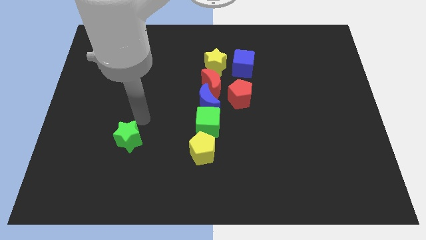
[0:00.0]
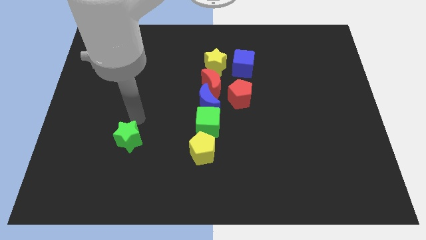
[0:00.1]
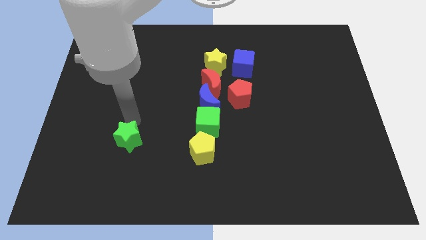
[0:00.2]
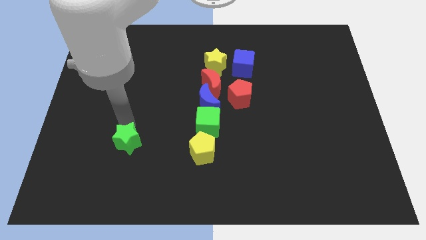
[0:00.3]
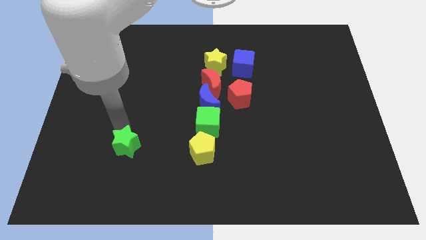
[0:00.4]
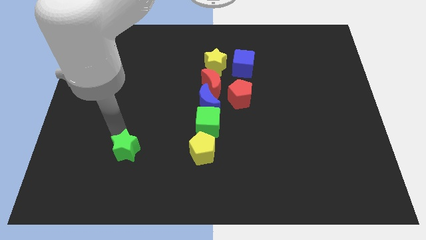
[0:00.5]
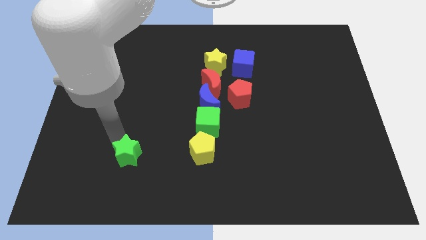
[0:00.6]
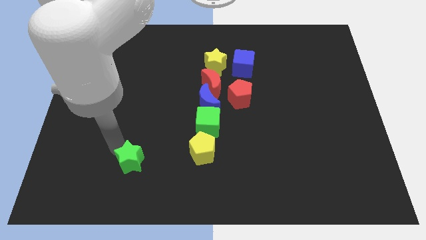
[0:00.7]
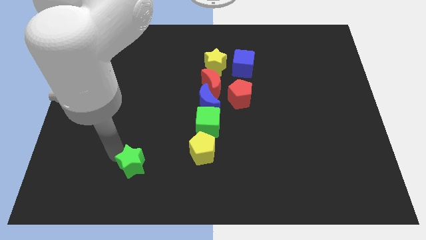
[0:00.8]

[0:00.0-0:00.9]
push the green star towards the bottom

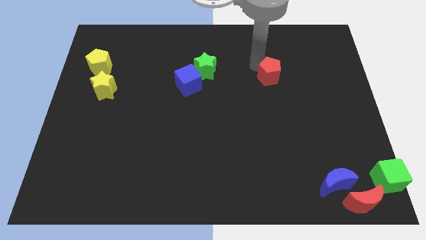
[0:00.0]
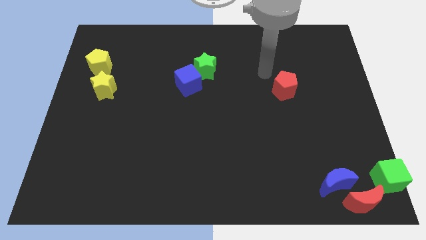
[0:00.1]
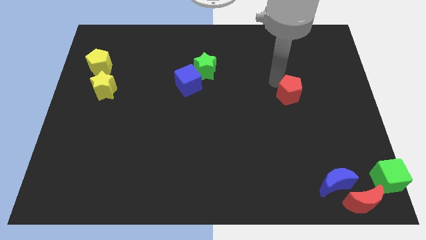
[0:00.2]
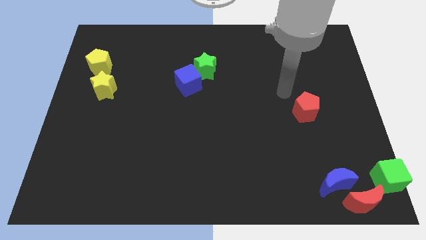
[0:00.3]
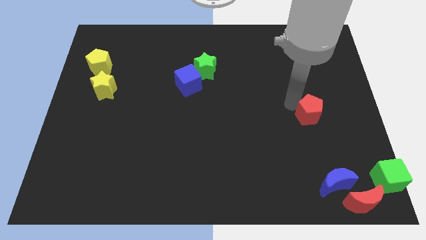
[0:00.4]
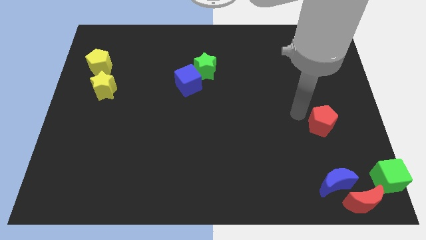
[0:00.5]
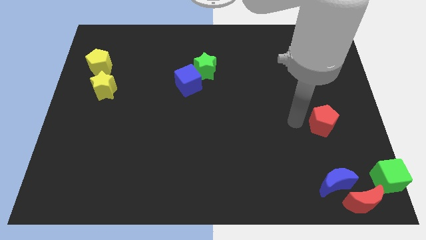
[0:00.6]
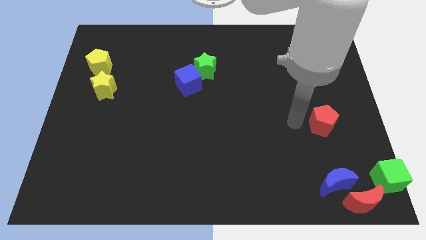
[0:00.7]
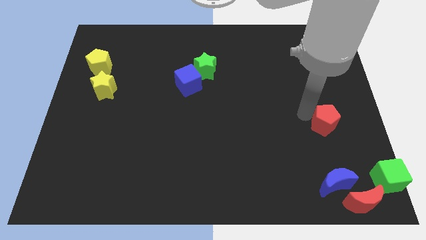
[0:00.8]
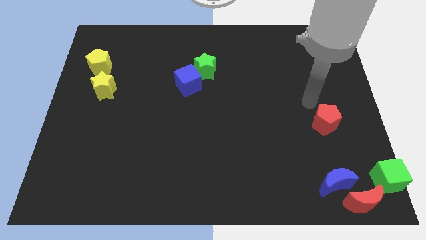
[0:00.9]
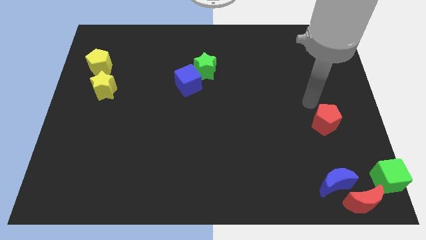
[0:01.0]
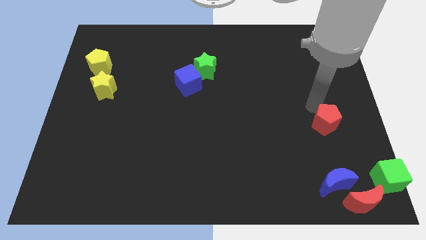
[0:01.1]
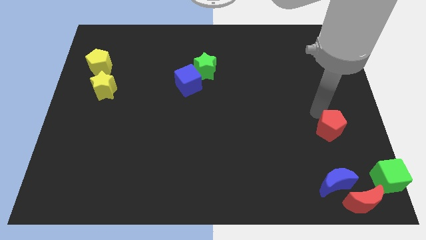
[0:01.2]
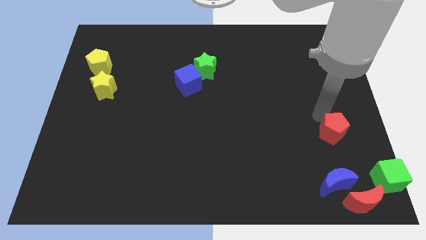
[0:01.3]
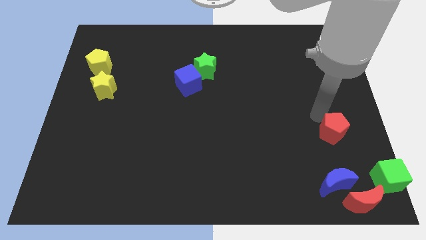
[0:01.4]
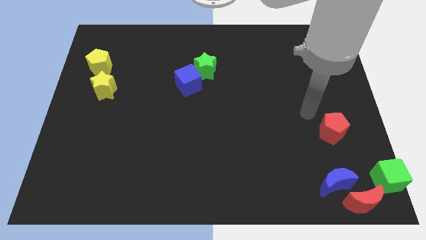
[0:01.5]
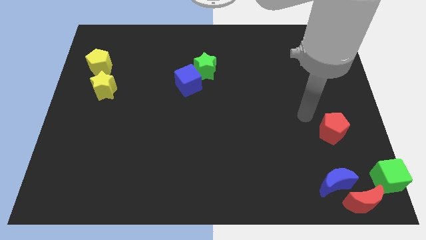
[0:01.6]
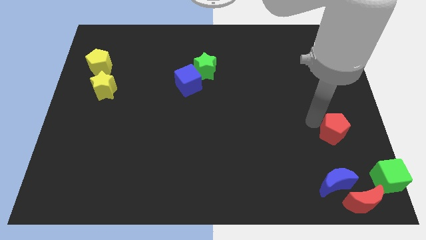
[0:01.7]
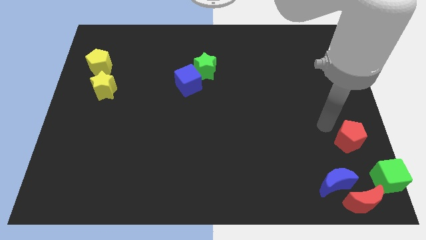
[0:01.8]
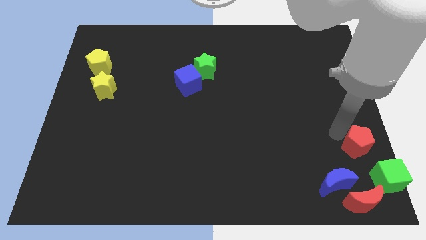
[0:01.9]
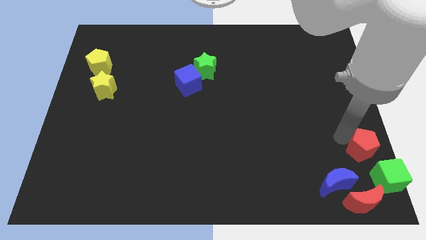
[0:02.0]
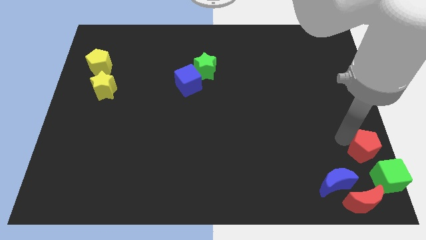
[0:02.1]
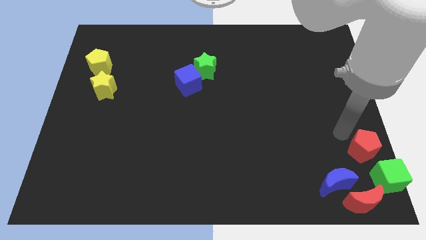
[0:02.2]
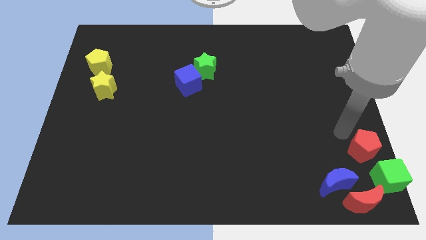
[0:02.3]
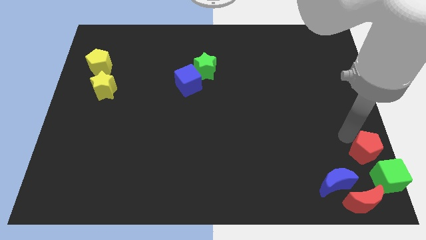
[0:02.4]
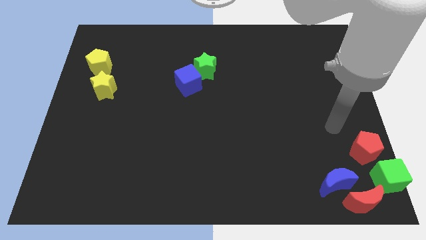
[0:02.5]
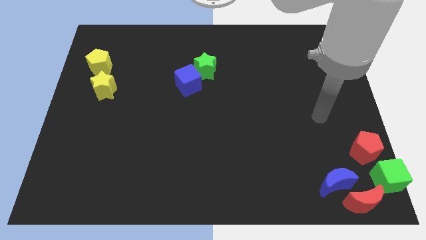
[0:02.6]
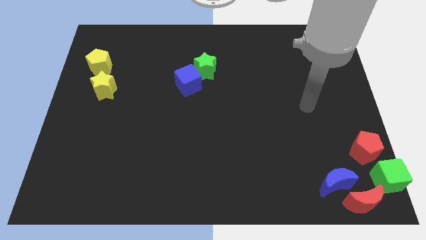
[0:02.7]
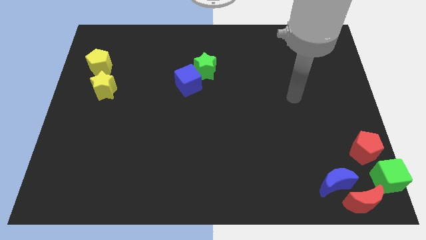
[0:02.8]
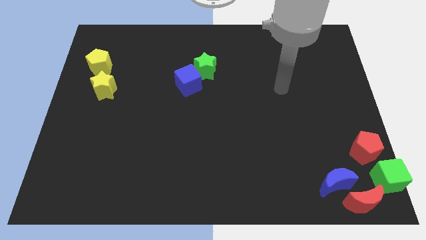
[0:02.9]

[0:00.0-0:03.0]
place the red pentagon on top of the green cube

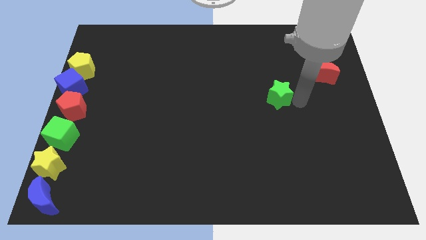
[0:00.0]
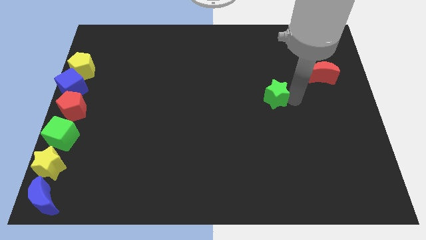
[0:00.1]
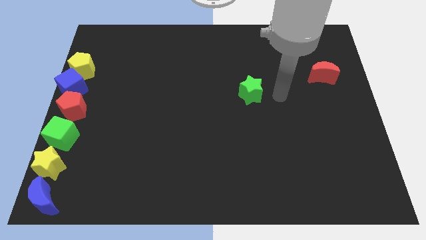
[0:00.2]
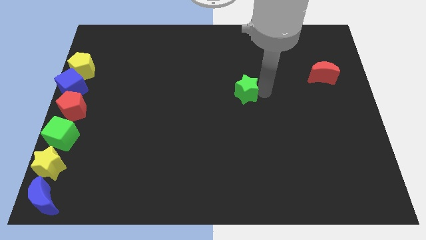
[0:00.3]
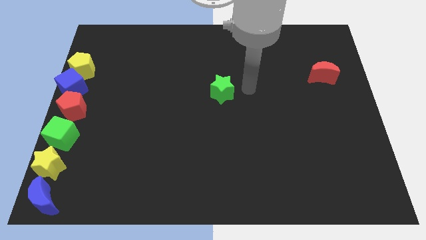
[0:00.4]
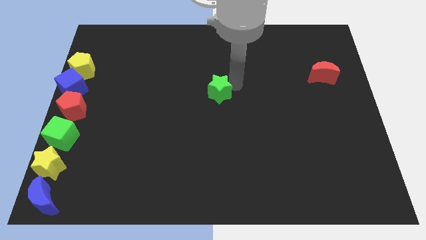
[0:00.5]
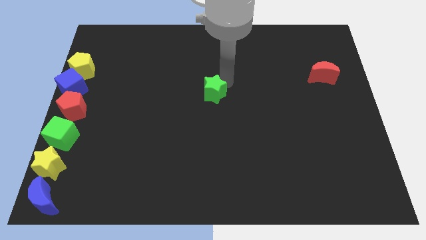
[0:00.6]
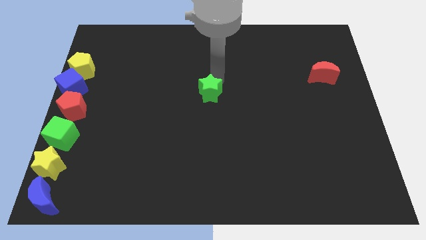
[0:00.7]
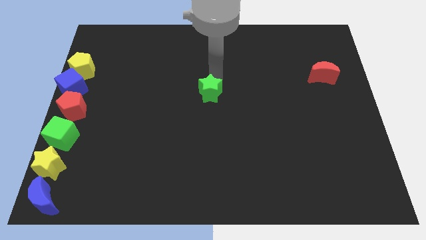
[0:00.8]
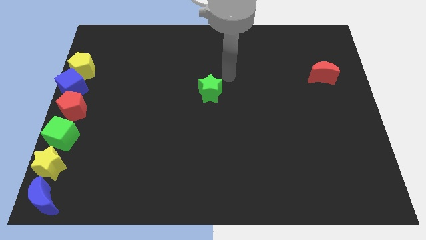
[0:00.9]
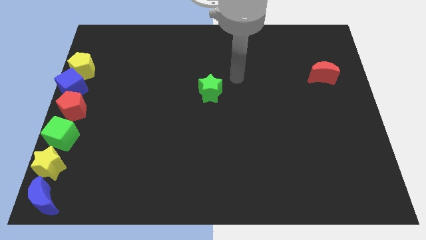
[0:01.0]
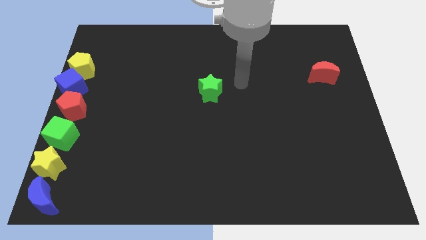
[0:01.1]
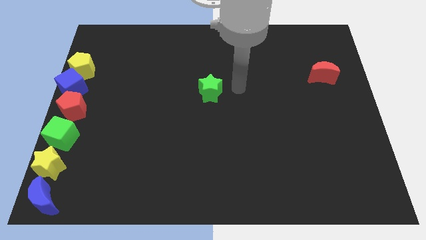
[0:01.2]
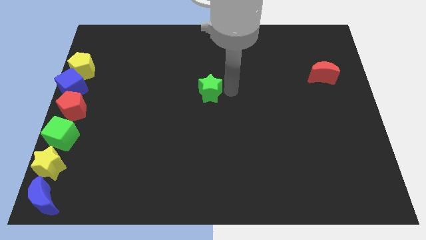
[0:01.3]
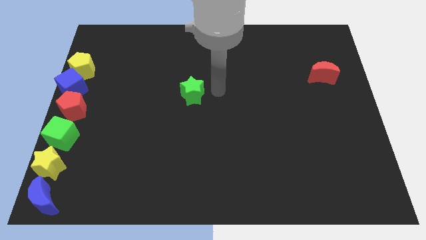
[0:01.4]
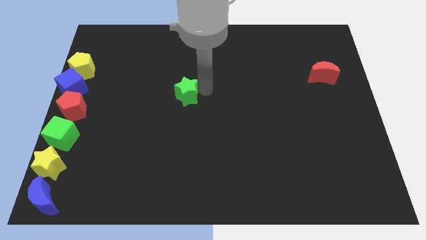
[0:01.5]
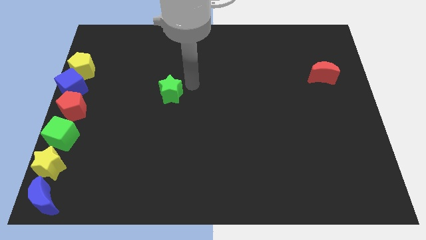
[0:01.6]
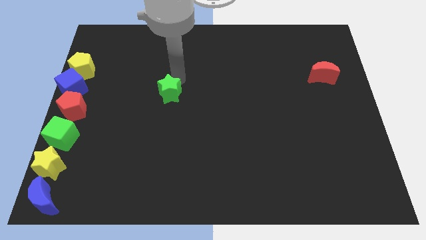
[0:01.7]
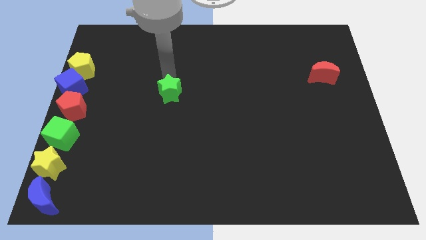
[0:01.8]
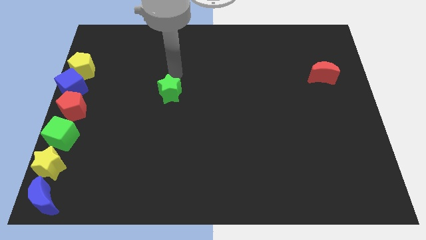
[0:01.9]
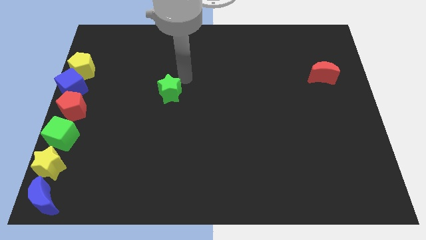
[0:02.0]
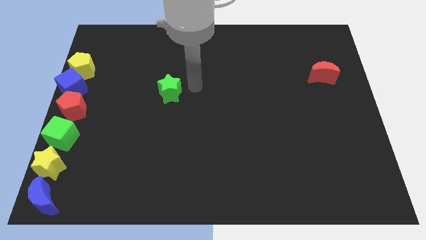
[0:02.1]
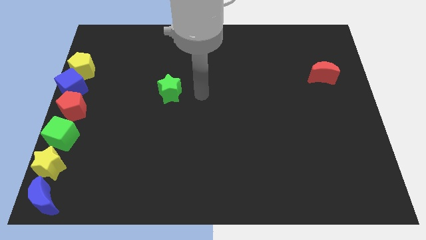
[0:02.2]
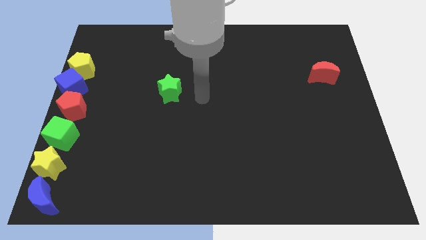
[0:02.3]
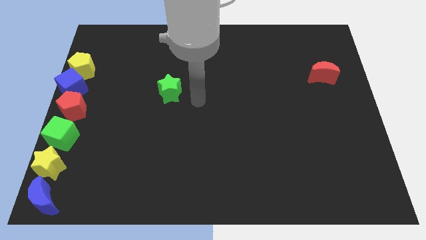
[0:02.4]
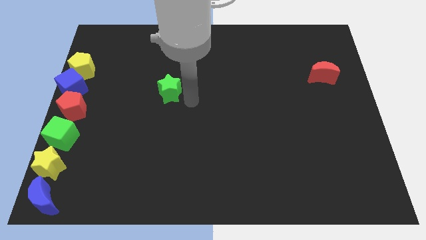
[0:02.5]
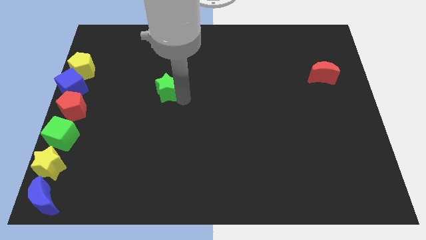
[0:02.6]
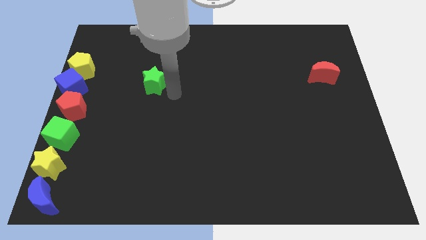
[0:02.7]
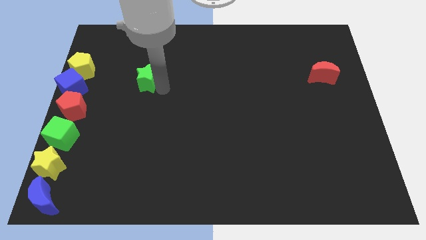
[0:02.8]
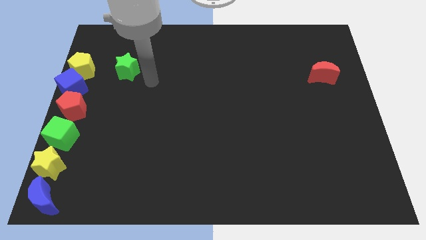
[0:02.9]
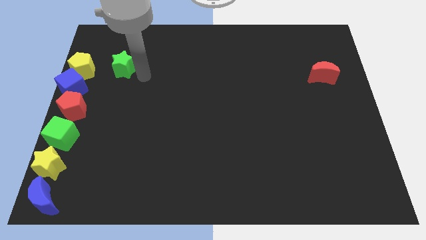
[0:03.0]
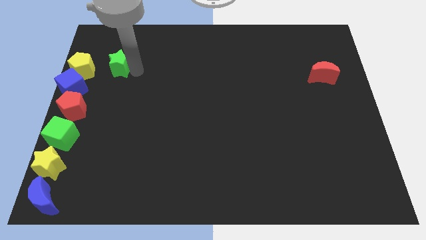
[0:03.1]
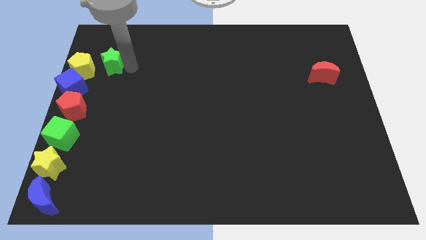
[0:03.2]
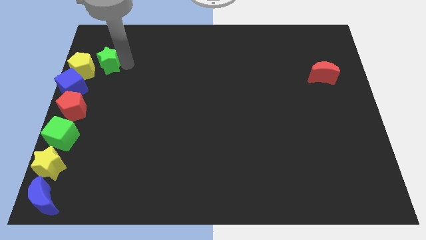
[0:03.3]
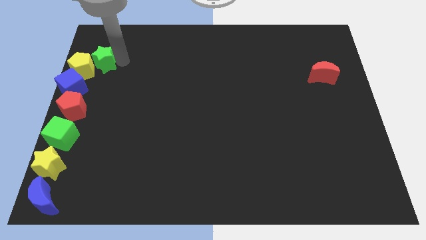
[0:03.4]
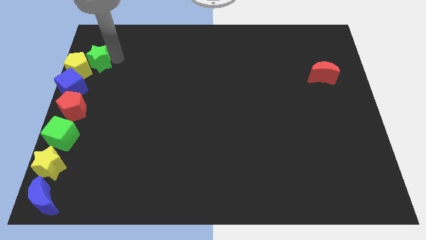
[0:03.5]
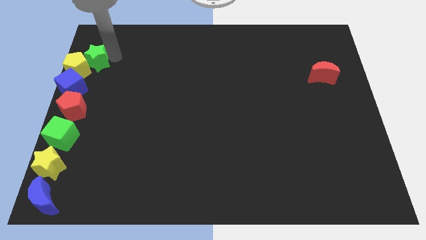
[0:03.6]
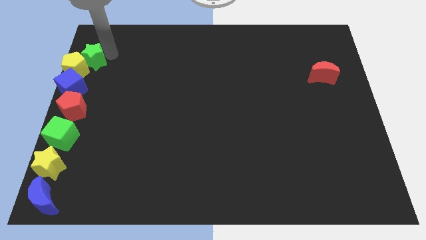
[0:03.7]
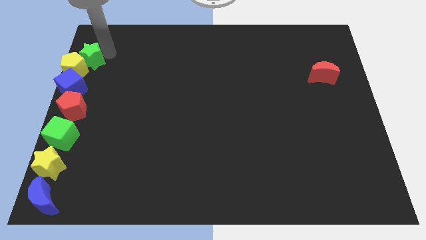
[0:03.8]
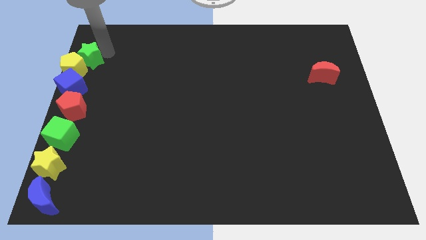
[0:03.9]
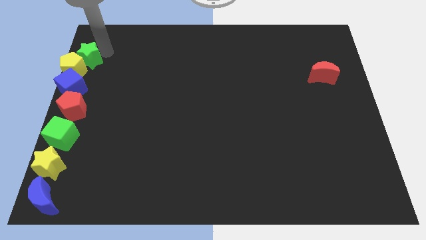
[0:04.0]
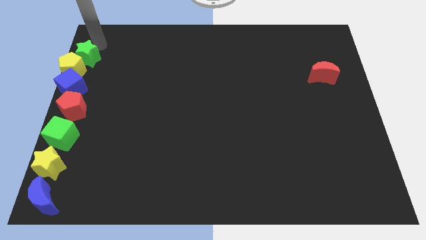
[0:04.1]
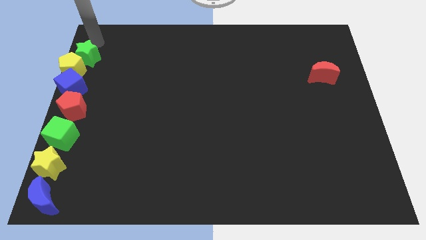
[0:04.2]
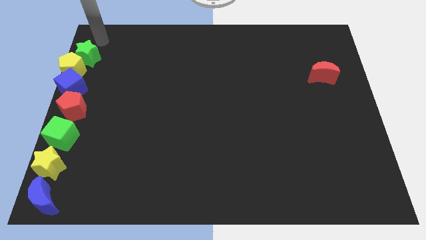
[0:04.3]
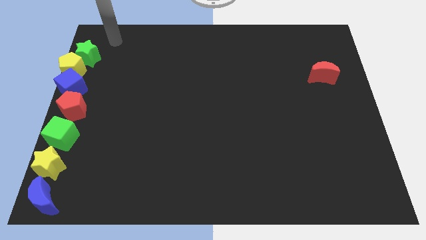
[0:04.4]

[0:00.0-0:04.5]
push the green star into the yellow pentagon

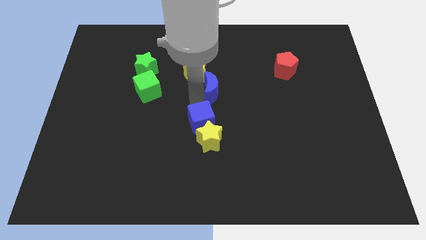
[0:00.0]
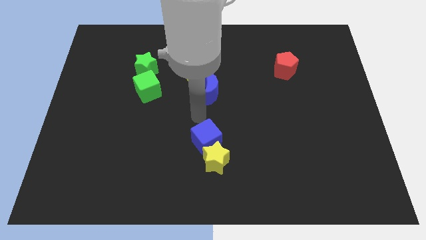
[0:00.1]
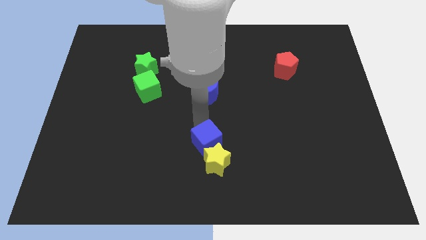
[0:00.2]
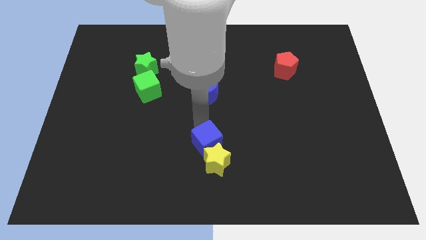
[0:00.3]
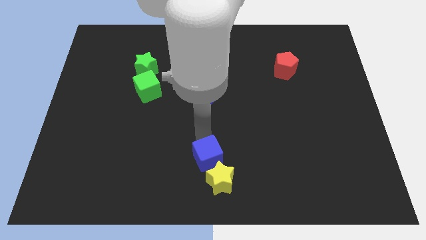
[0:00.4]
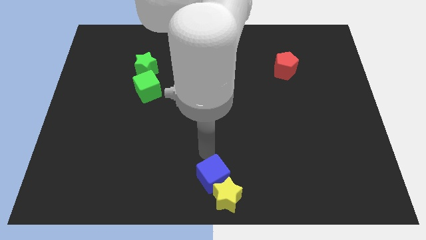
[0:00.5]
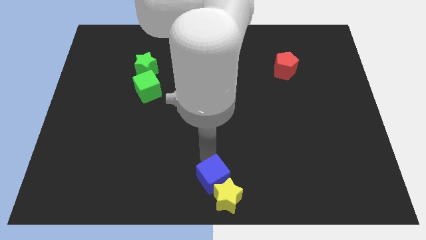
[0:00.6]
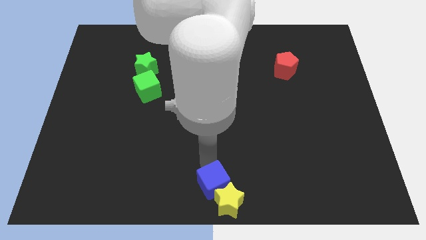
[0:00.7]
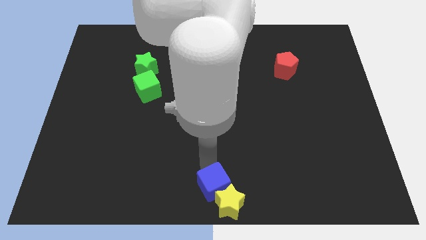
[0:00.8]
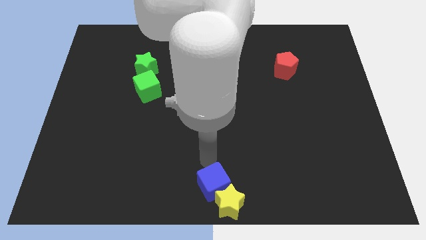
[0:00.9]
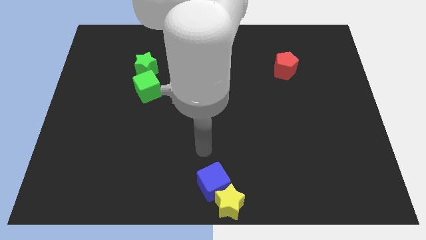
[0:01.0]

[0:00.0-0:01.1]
put the blue cube and yellow star at the bottom center of the board
